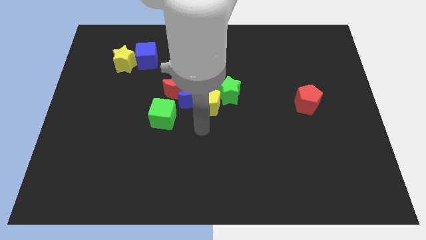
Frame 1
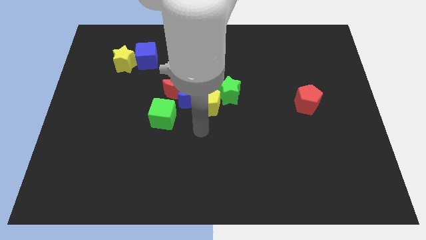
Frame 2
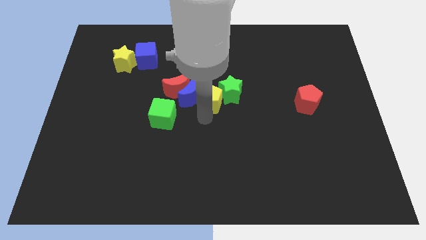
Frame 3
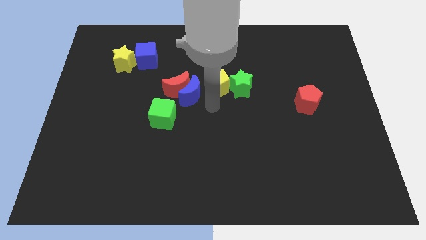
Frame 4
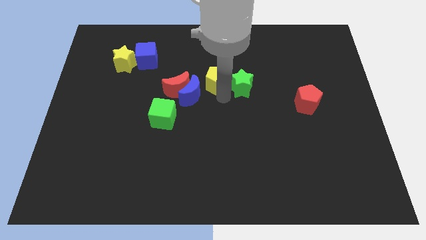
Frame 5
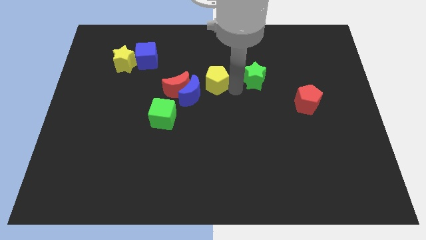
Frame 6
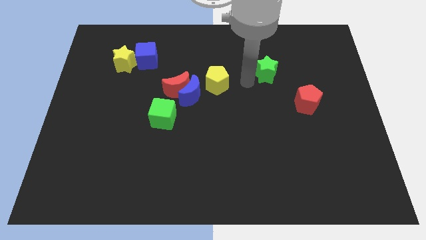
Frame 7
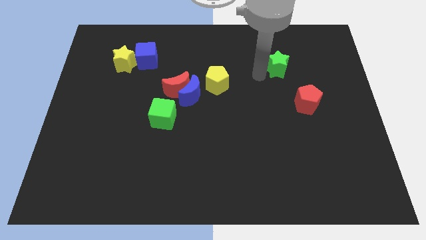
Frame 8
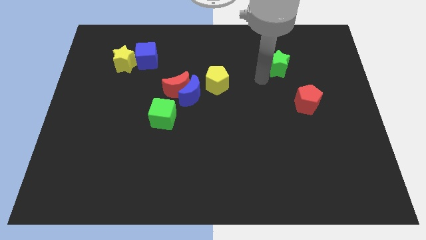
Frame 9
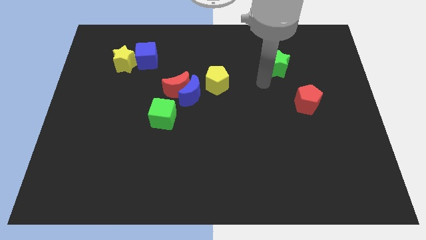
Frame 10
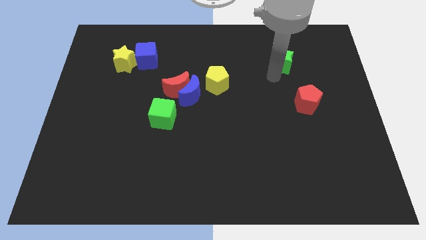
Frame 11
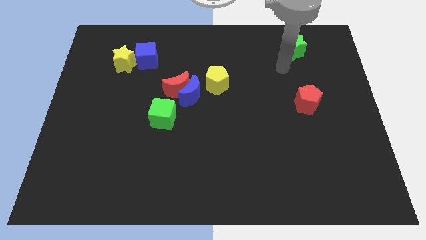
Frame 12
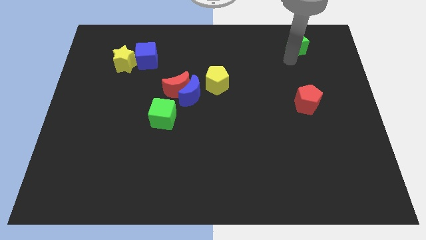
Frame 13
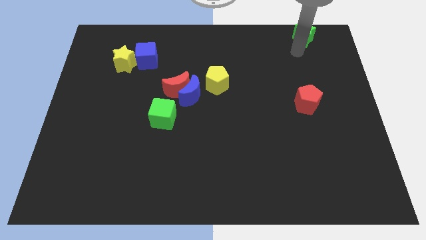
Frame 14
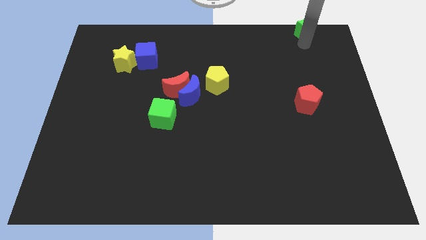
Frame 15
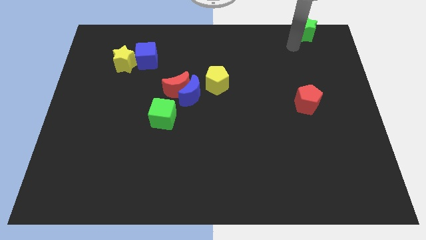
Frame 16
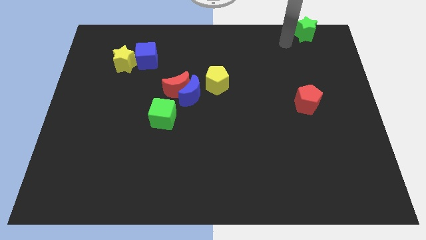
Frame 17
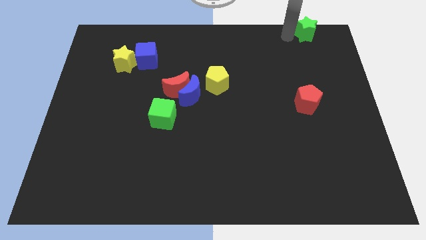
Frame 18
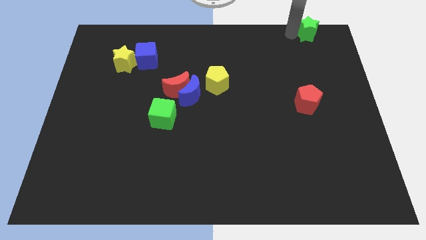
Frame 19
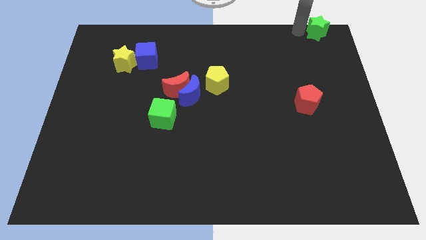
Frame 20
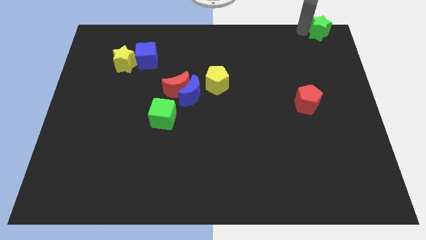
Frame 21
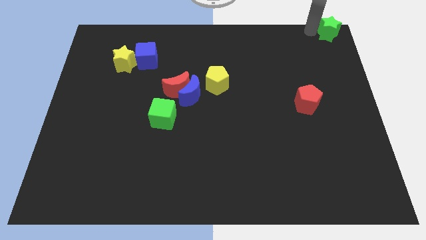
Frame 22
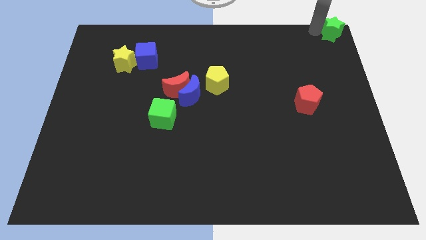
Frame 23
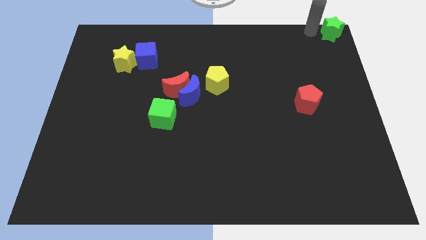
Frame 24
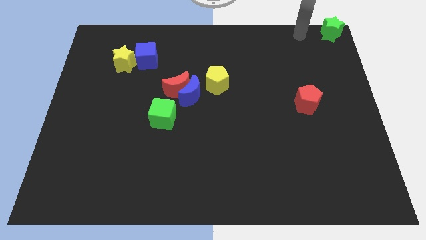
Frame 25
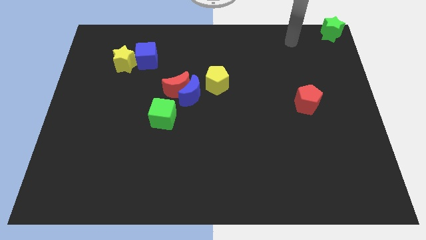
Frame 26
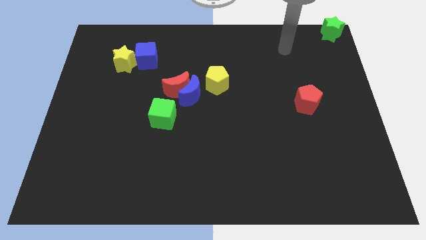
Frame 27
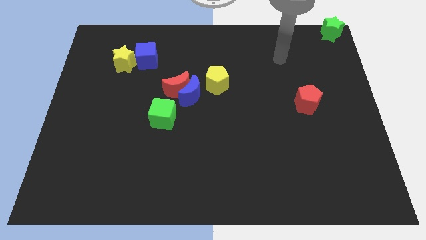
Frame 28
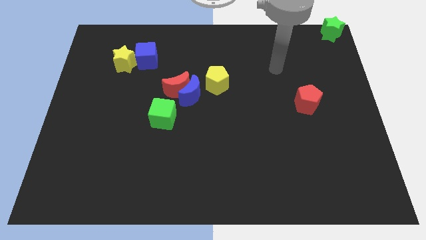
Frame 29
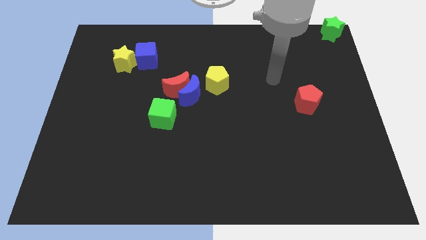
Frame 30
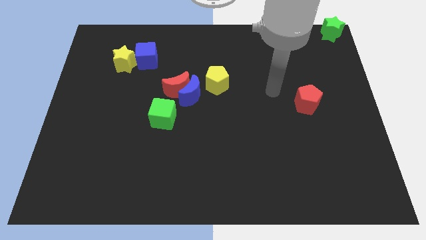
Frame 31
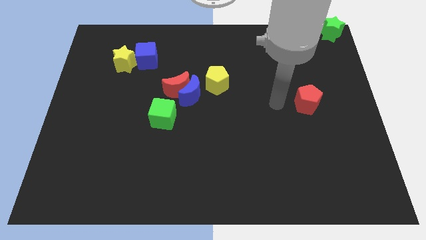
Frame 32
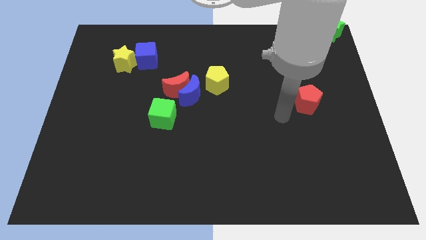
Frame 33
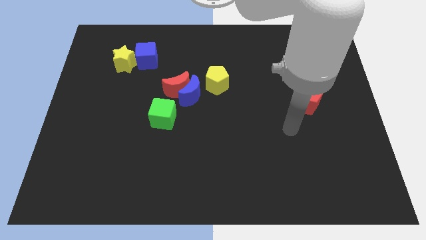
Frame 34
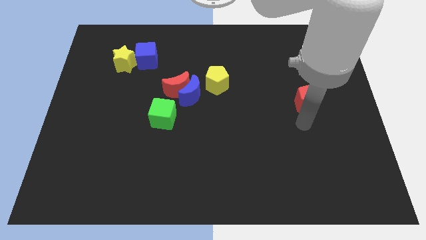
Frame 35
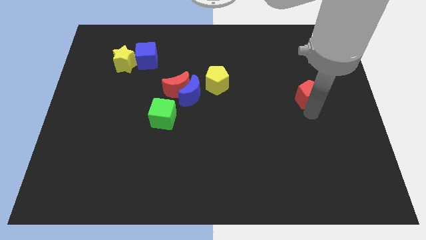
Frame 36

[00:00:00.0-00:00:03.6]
place the green star above the red pentagon

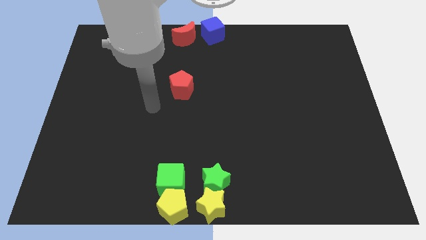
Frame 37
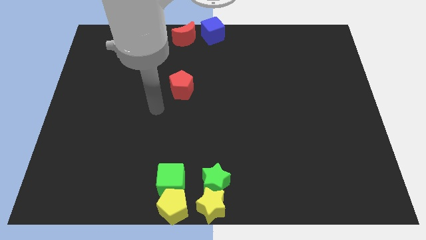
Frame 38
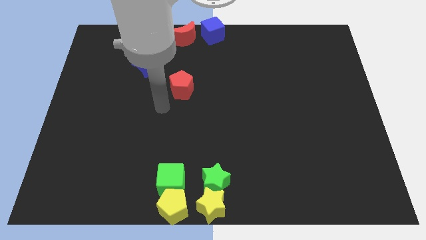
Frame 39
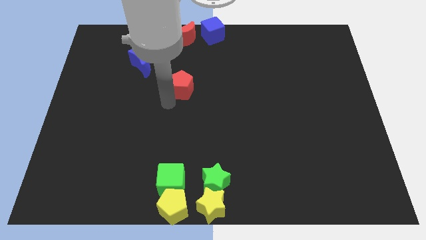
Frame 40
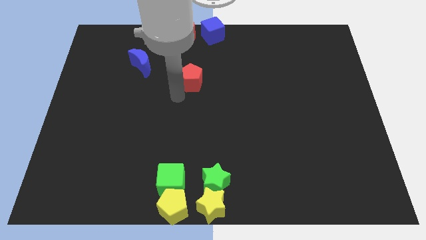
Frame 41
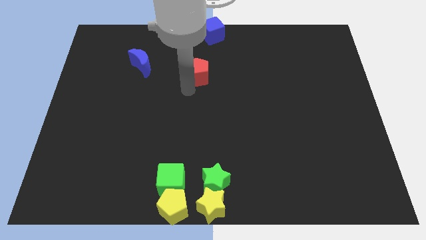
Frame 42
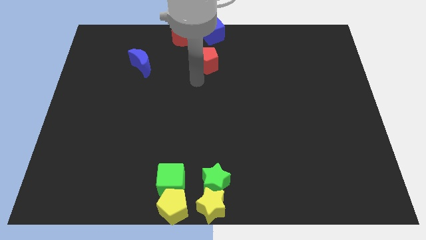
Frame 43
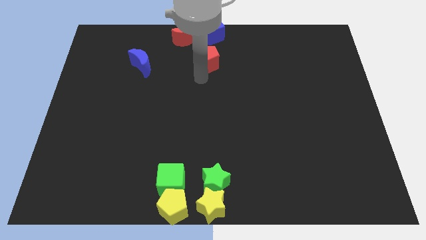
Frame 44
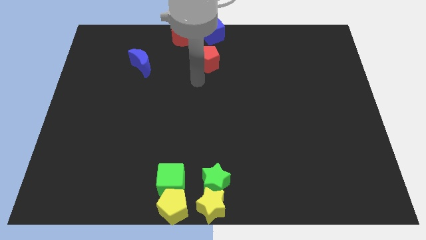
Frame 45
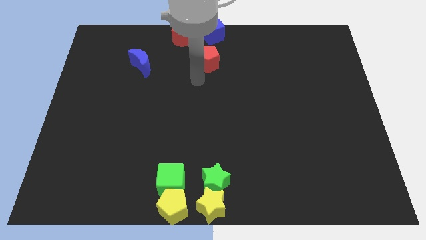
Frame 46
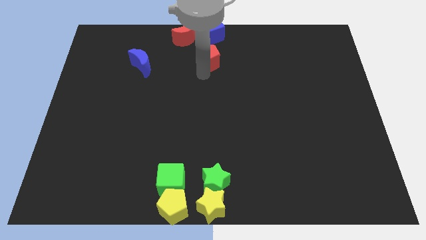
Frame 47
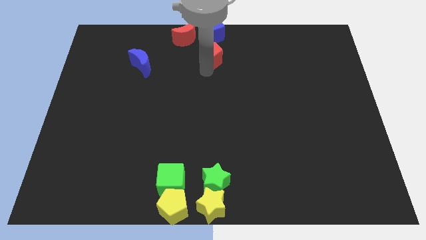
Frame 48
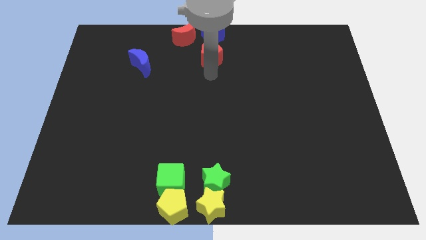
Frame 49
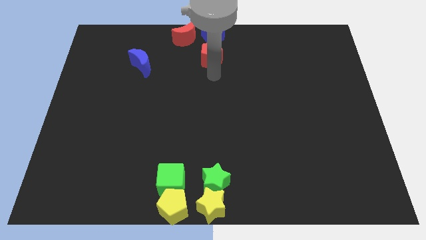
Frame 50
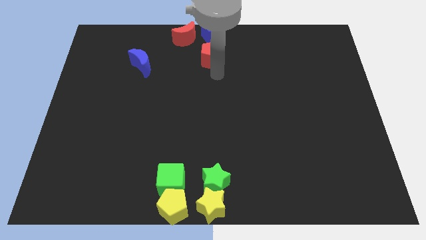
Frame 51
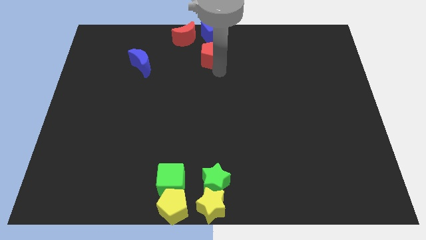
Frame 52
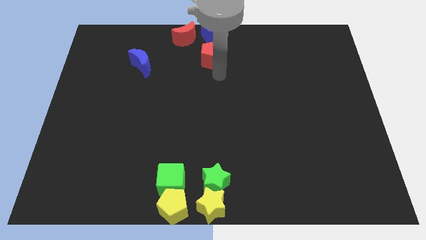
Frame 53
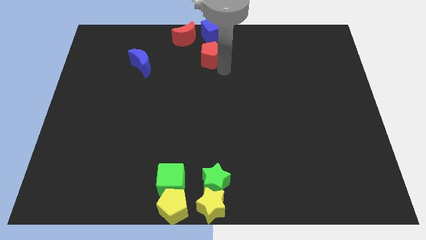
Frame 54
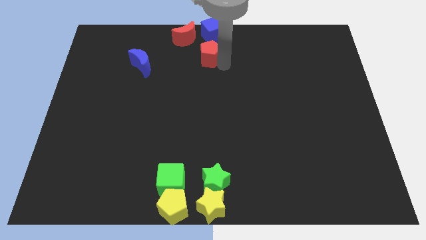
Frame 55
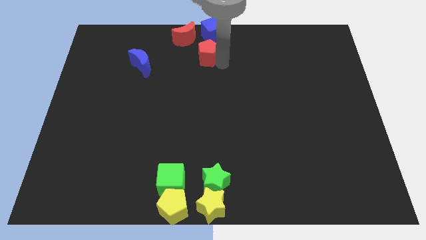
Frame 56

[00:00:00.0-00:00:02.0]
push the red pentagon to the bottom of the blue cube

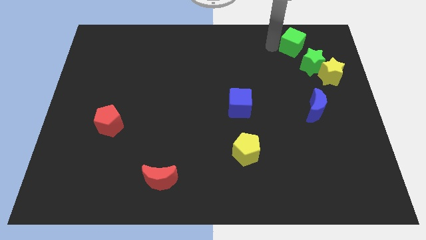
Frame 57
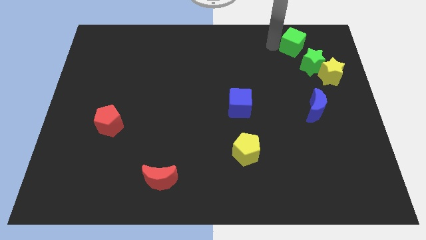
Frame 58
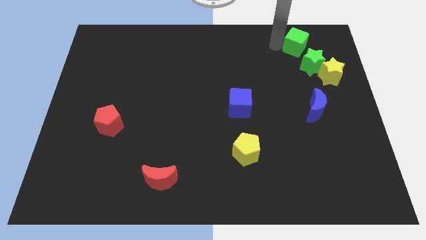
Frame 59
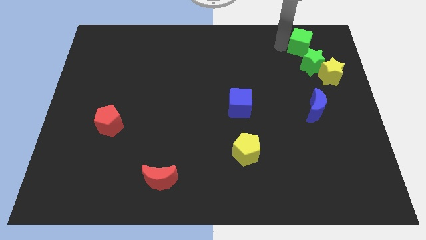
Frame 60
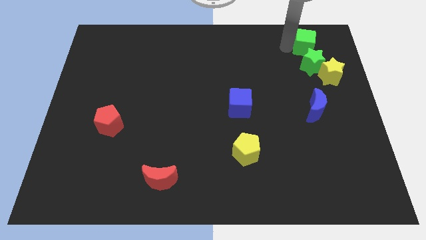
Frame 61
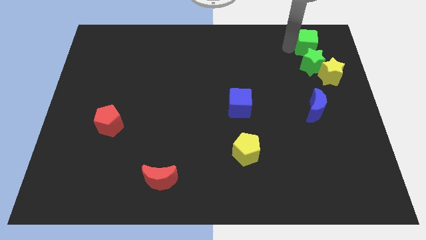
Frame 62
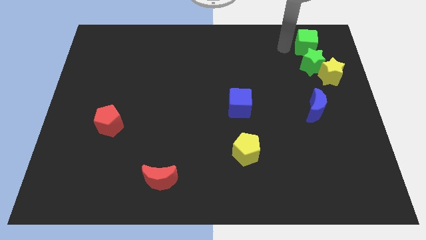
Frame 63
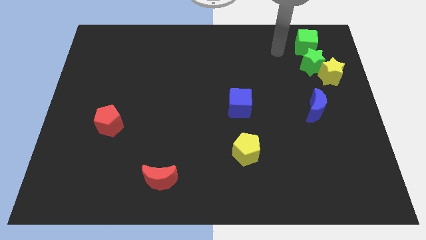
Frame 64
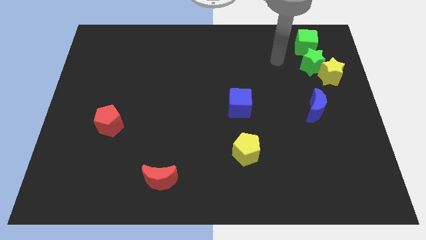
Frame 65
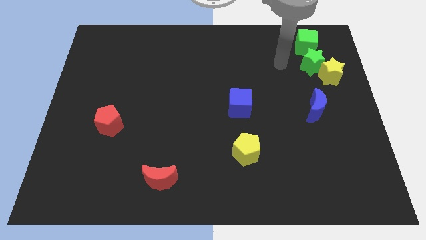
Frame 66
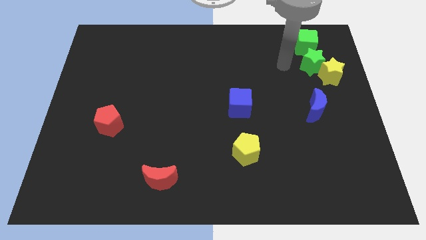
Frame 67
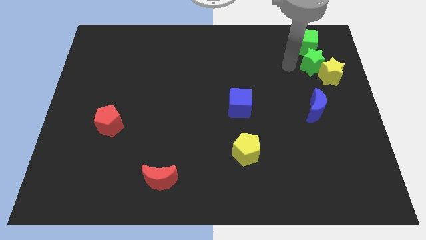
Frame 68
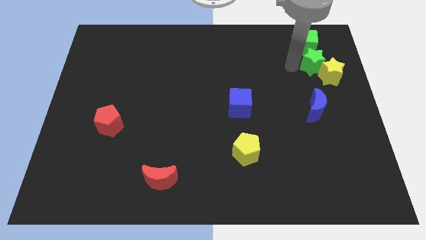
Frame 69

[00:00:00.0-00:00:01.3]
slightly move the green cube to the top of the green star

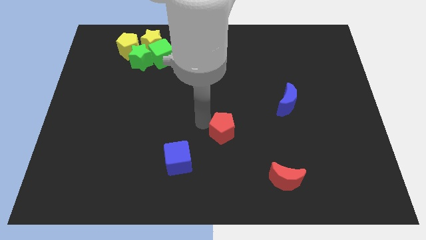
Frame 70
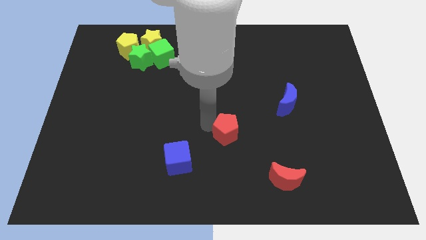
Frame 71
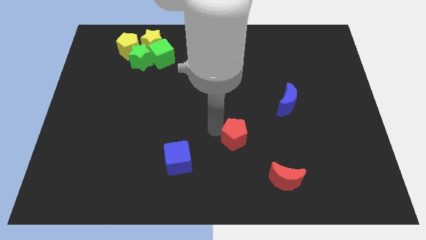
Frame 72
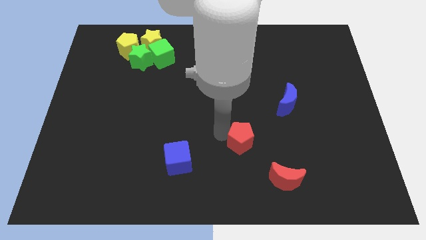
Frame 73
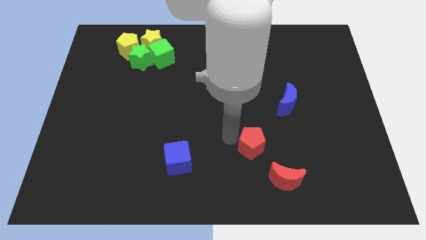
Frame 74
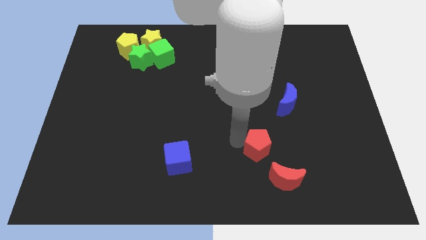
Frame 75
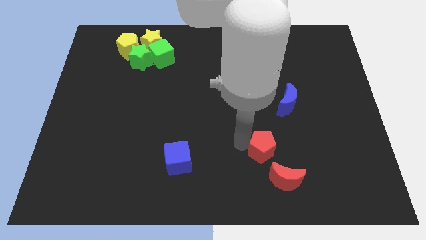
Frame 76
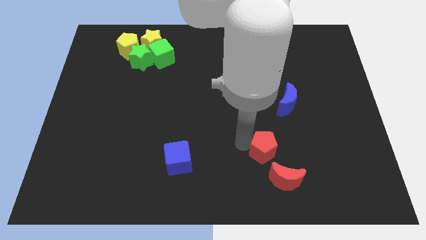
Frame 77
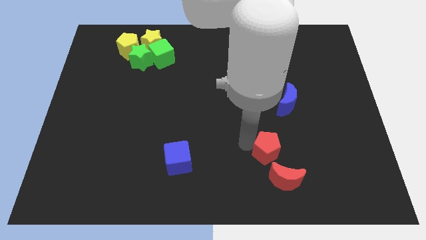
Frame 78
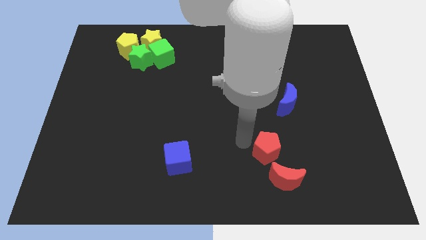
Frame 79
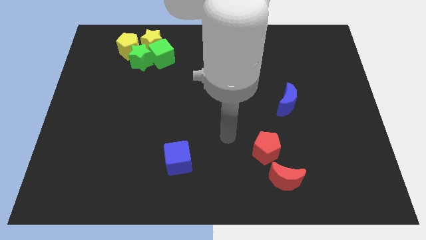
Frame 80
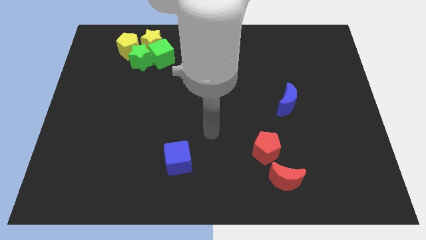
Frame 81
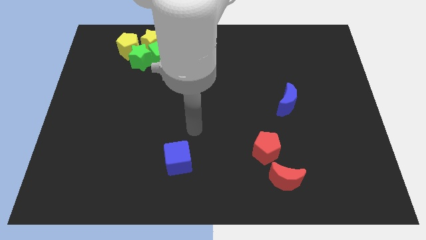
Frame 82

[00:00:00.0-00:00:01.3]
put the red pentagon diagonally on the top left side of the red crescent

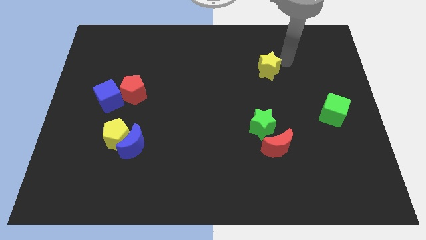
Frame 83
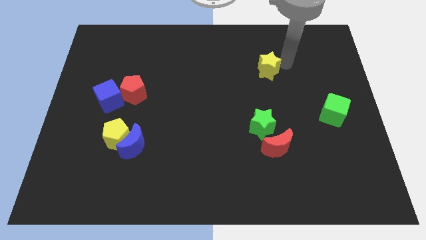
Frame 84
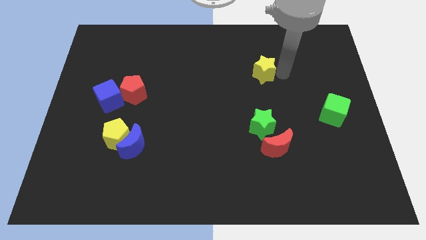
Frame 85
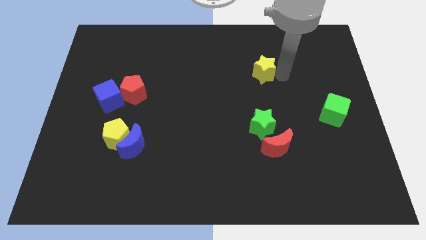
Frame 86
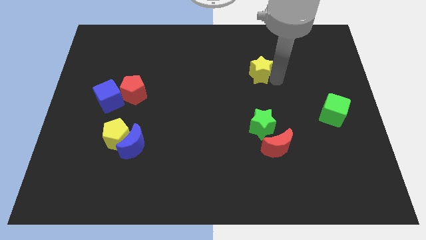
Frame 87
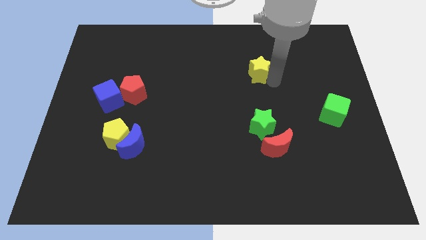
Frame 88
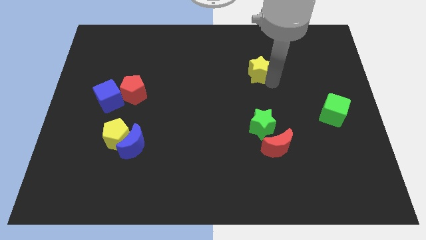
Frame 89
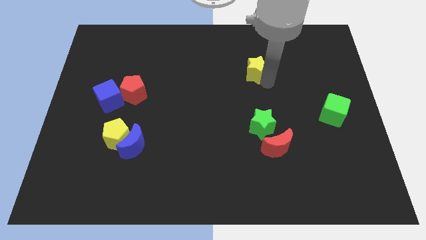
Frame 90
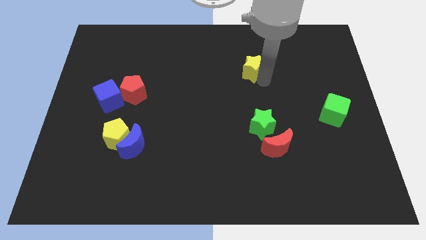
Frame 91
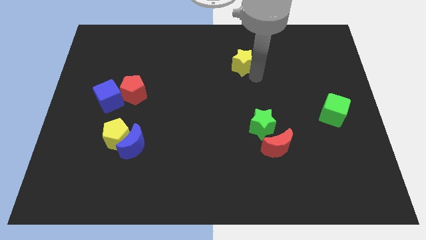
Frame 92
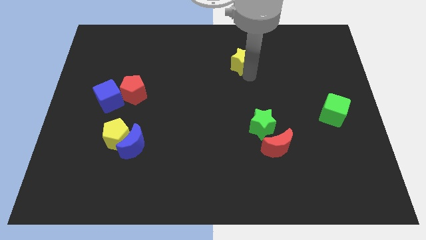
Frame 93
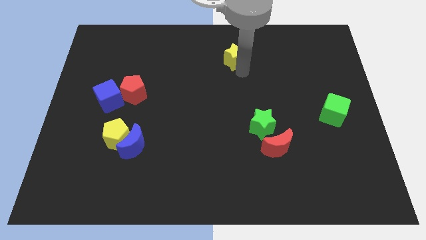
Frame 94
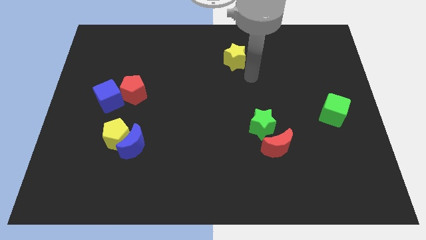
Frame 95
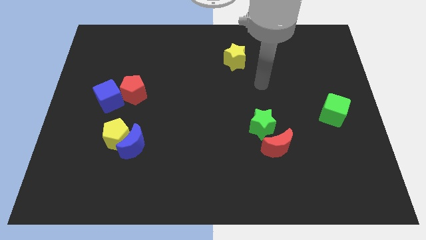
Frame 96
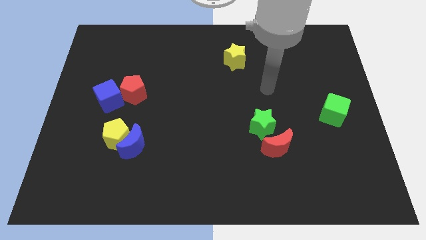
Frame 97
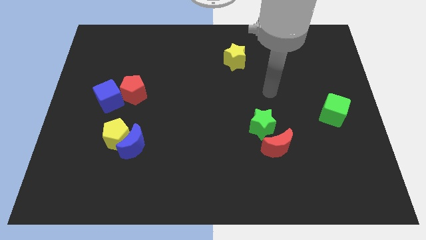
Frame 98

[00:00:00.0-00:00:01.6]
put the yellow star diagonal to the green cube
